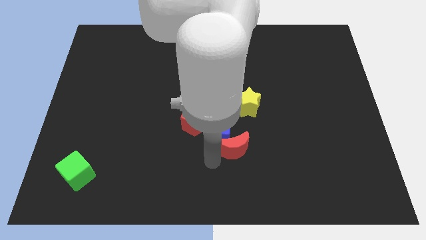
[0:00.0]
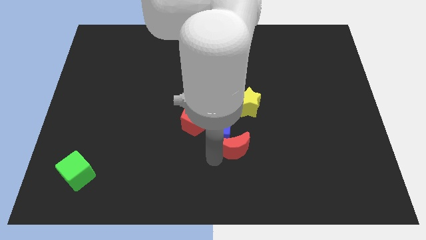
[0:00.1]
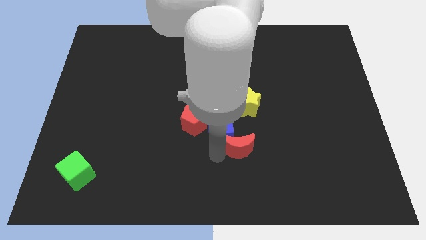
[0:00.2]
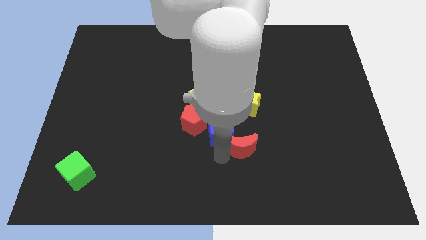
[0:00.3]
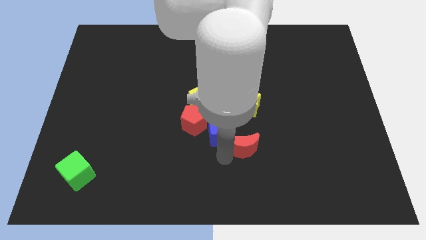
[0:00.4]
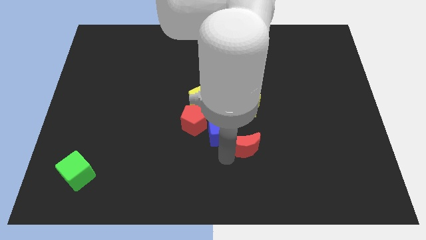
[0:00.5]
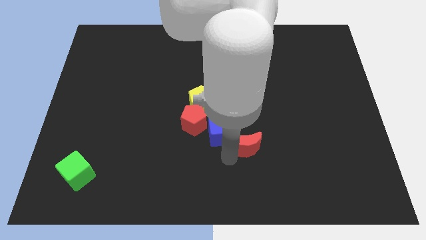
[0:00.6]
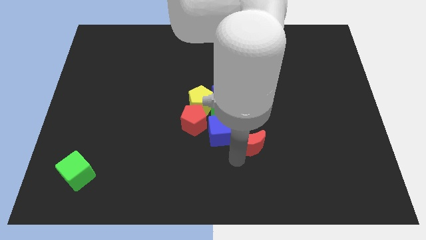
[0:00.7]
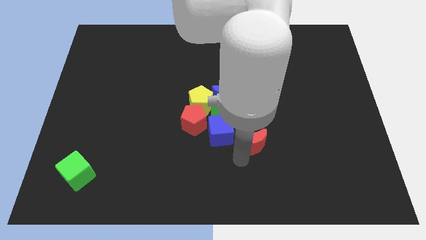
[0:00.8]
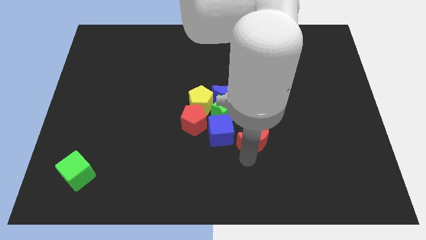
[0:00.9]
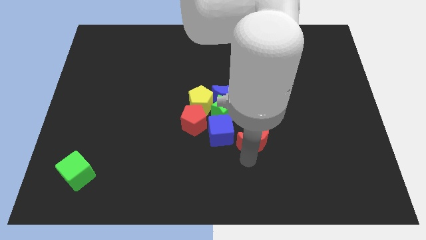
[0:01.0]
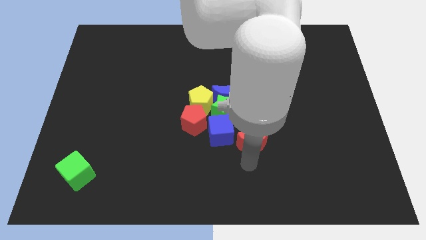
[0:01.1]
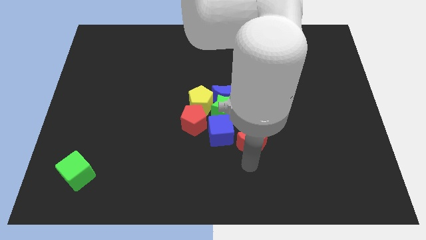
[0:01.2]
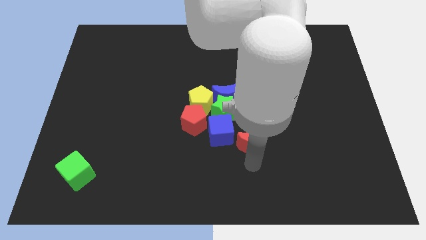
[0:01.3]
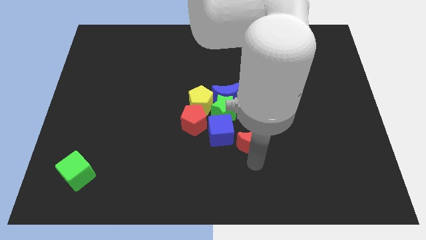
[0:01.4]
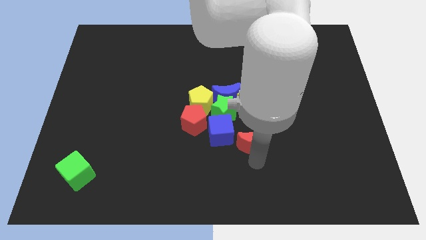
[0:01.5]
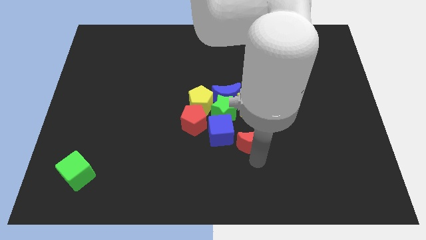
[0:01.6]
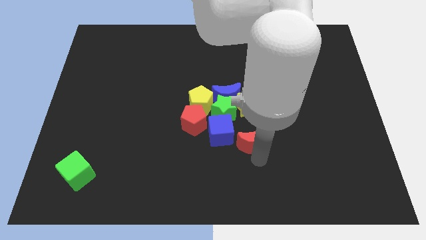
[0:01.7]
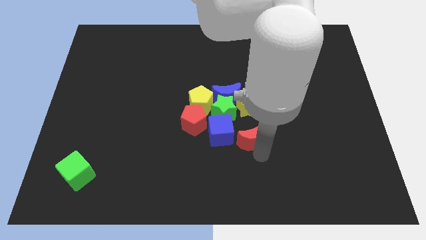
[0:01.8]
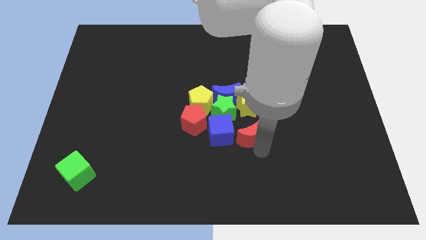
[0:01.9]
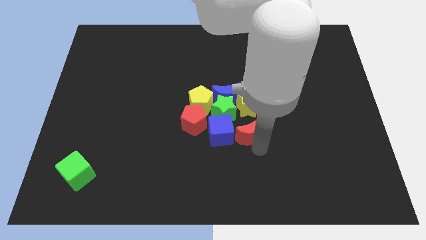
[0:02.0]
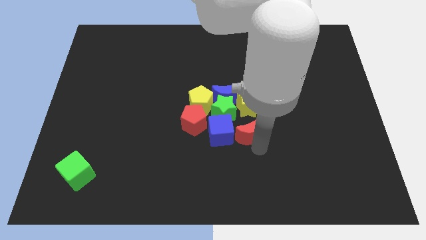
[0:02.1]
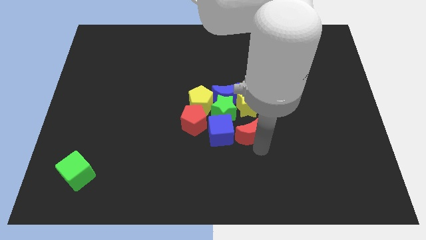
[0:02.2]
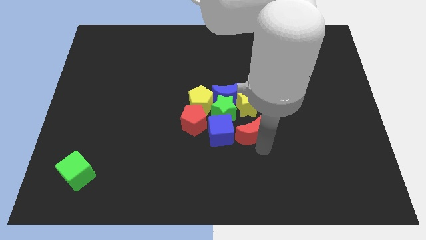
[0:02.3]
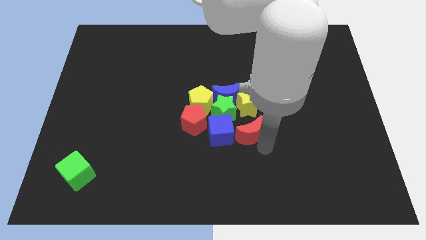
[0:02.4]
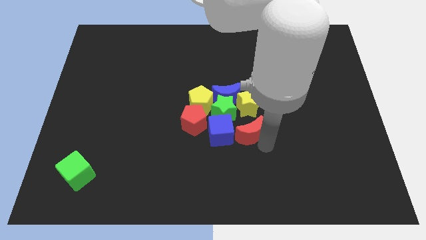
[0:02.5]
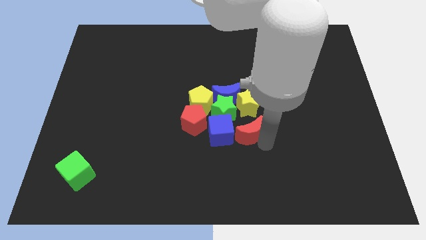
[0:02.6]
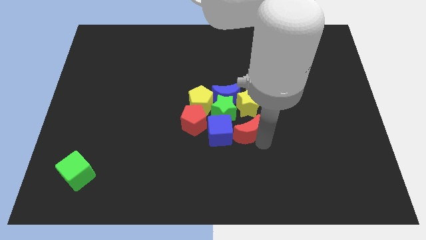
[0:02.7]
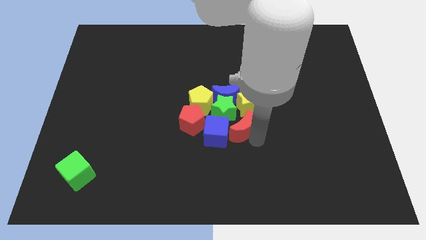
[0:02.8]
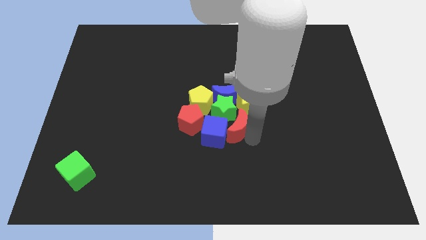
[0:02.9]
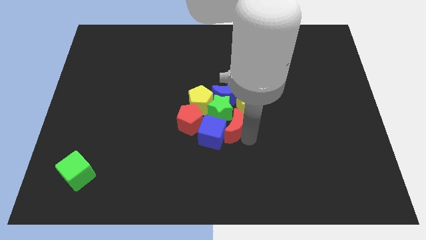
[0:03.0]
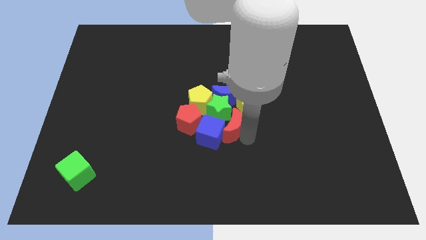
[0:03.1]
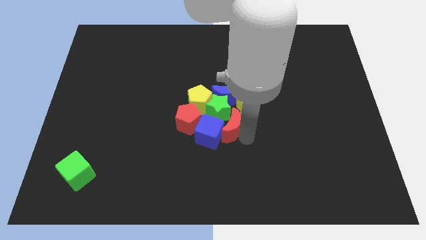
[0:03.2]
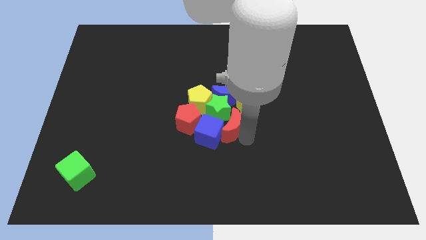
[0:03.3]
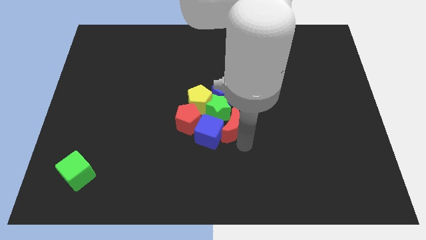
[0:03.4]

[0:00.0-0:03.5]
place the red crescent in between green star and blue cube

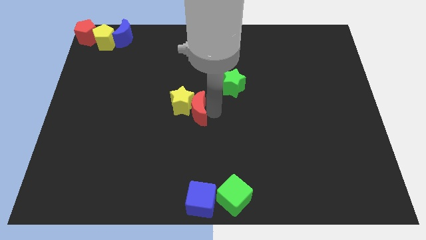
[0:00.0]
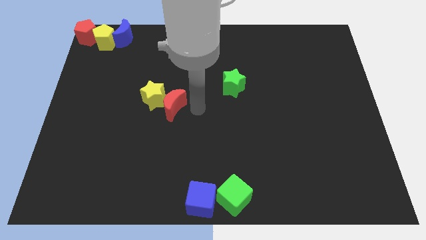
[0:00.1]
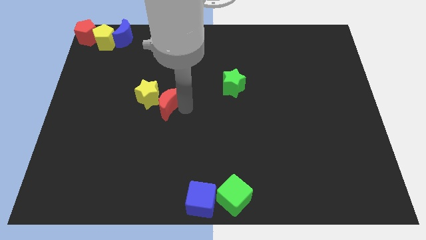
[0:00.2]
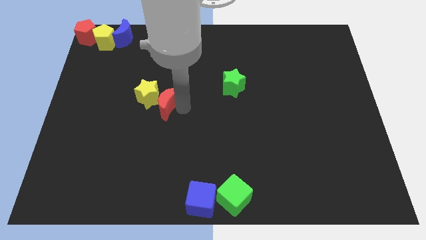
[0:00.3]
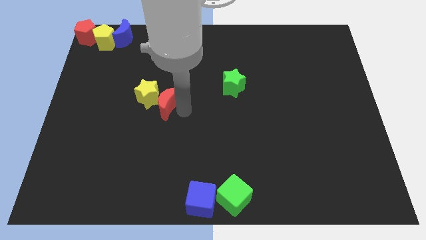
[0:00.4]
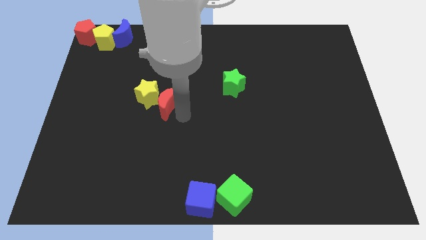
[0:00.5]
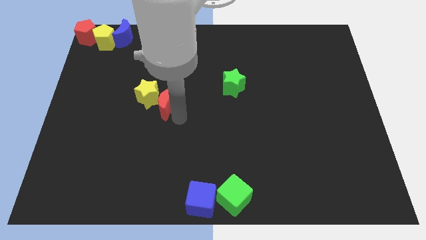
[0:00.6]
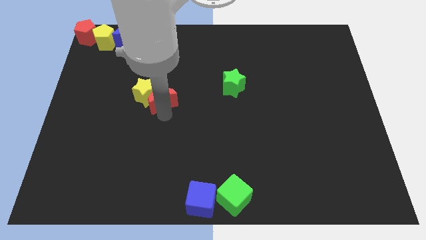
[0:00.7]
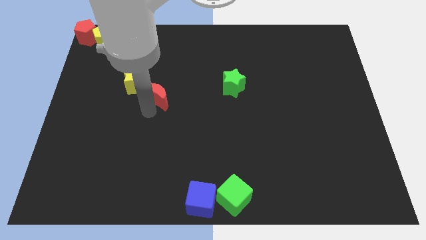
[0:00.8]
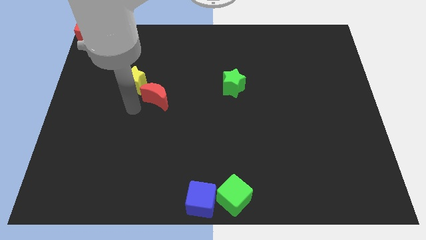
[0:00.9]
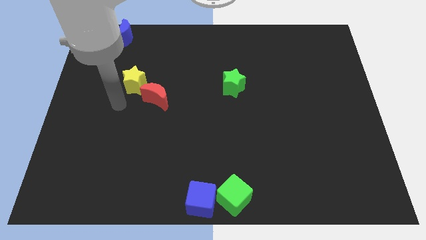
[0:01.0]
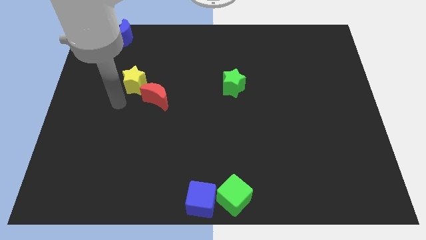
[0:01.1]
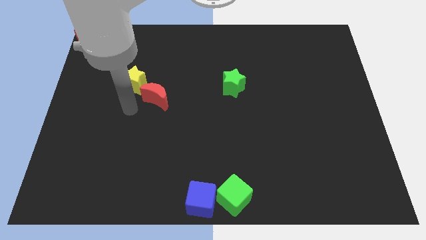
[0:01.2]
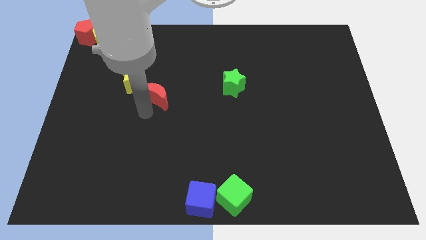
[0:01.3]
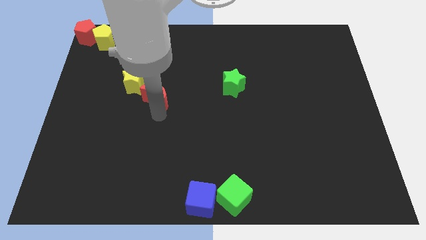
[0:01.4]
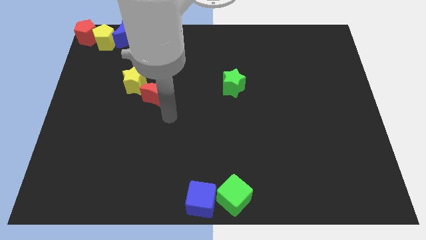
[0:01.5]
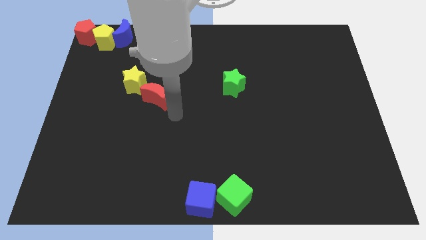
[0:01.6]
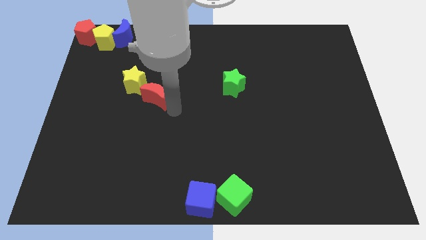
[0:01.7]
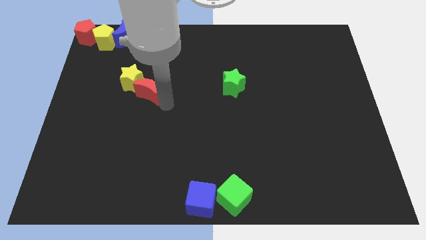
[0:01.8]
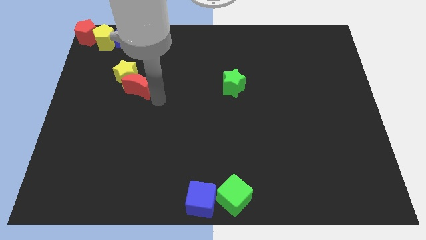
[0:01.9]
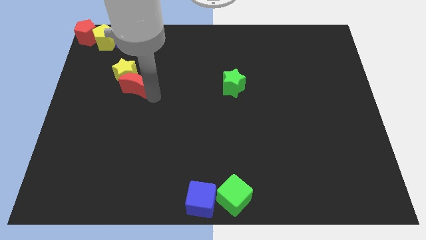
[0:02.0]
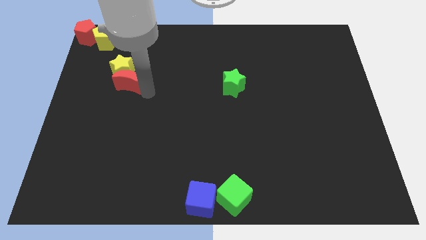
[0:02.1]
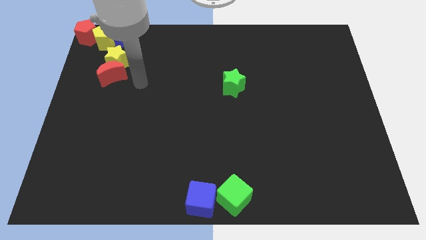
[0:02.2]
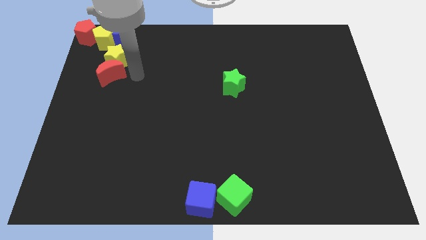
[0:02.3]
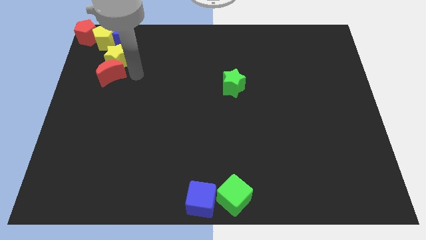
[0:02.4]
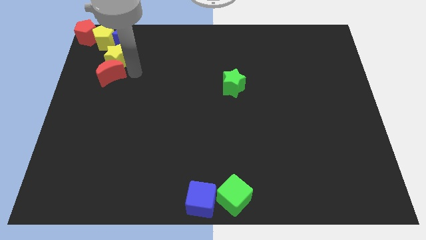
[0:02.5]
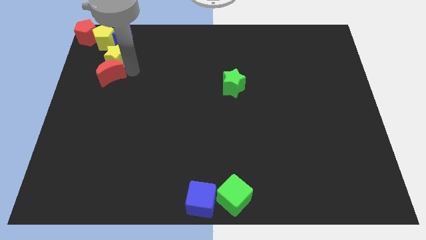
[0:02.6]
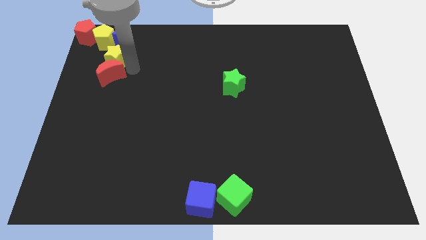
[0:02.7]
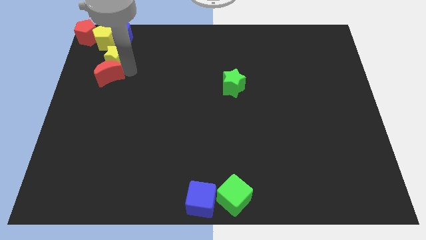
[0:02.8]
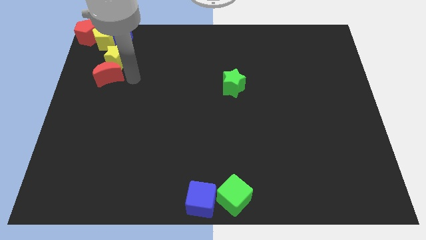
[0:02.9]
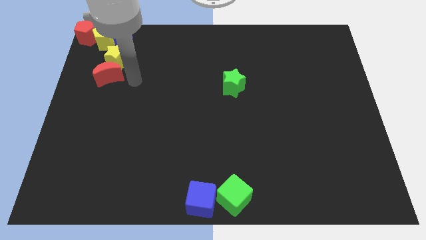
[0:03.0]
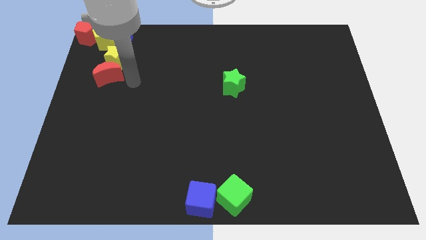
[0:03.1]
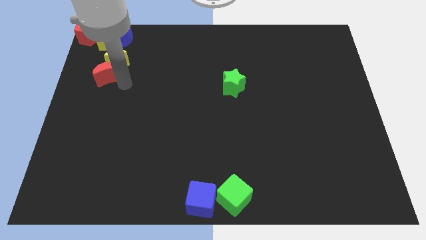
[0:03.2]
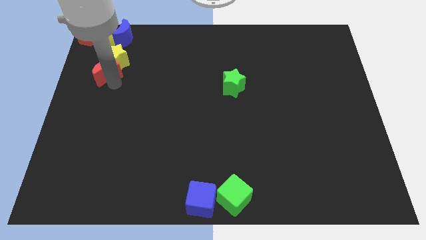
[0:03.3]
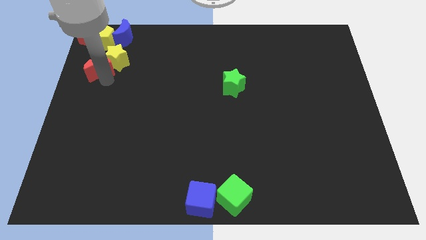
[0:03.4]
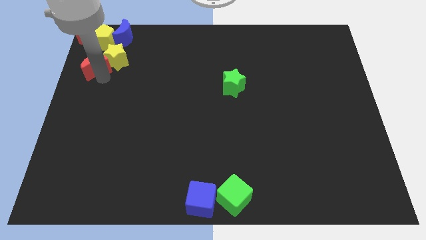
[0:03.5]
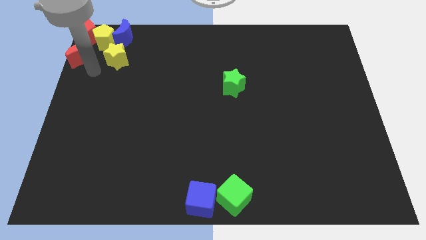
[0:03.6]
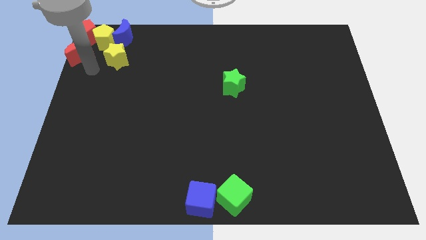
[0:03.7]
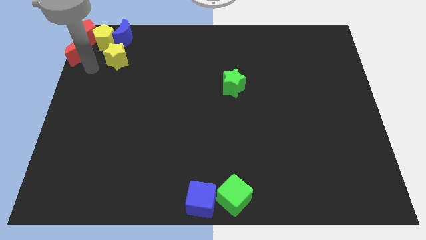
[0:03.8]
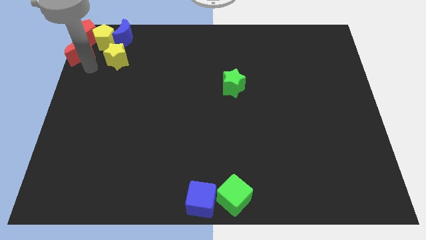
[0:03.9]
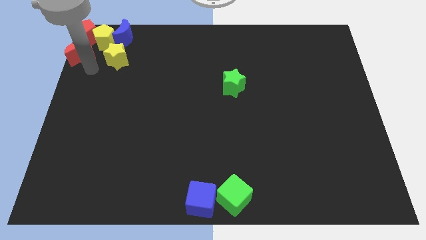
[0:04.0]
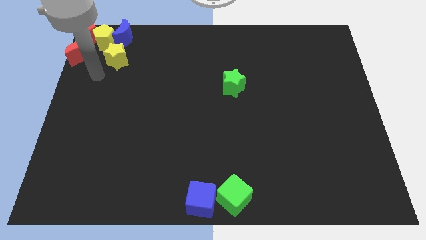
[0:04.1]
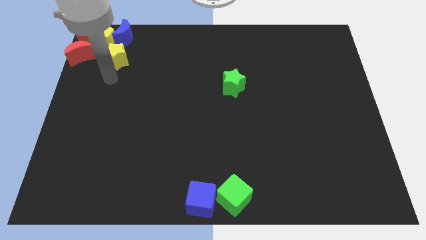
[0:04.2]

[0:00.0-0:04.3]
move the red moon and yellow star to the bottom side of the red pentagon

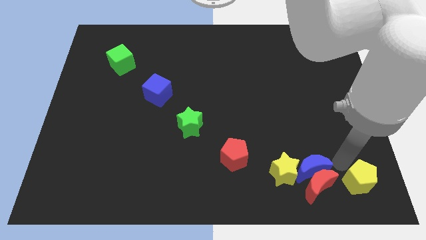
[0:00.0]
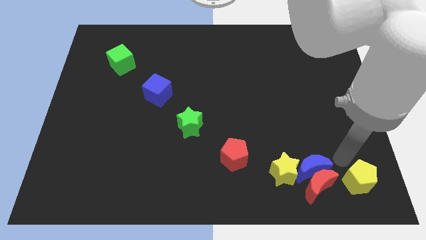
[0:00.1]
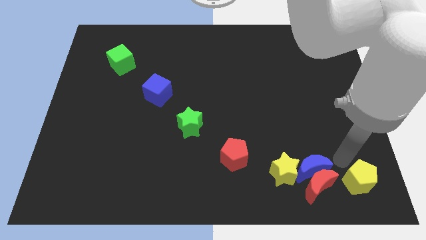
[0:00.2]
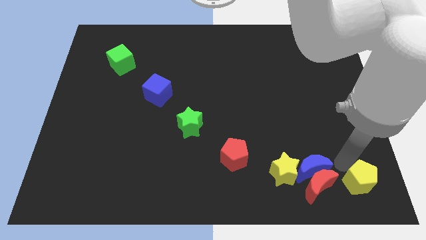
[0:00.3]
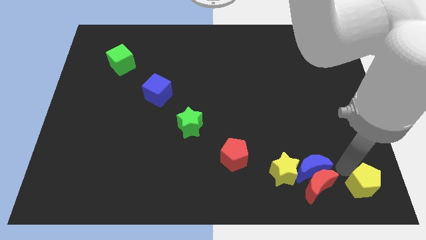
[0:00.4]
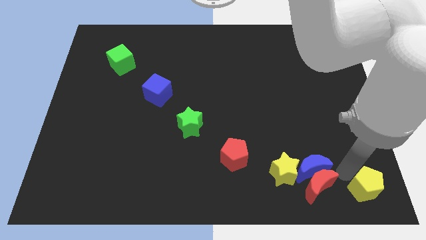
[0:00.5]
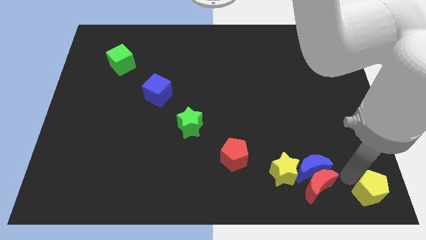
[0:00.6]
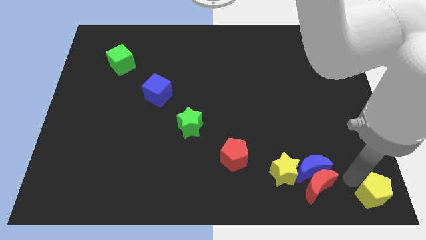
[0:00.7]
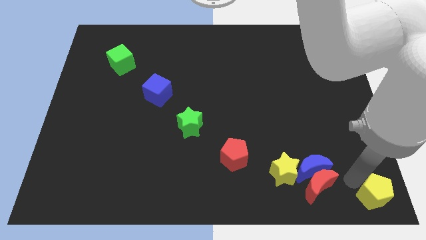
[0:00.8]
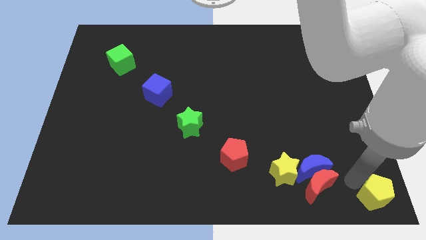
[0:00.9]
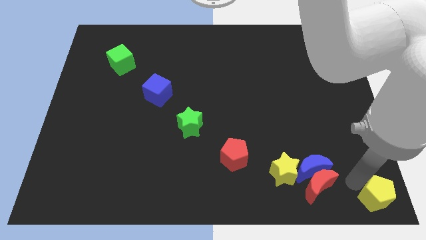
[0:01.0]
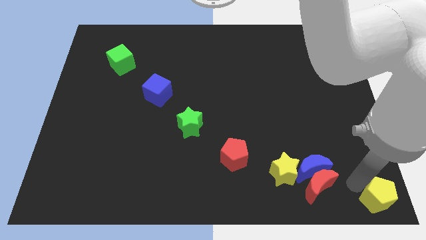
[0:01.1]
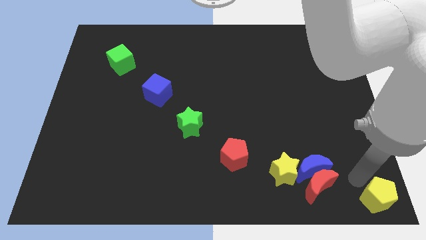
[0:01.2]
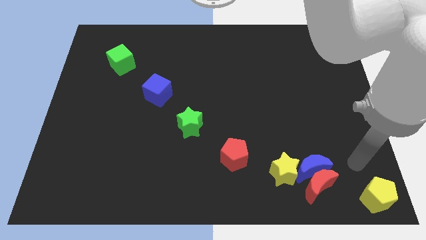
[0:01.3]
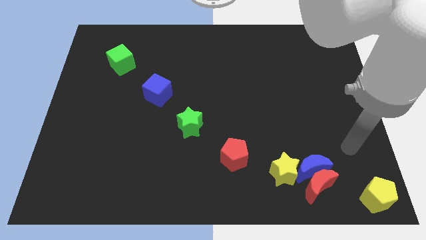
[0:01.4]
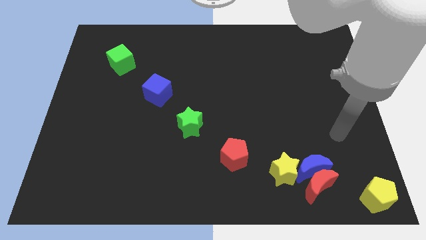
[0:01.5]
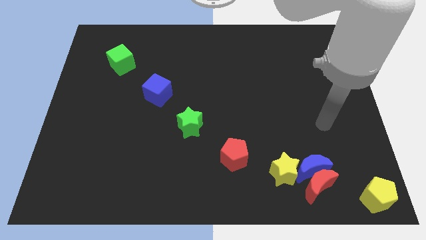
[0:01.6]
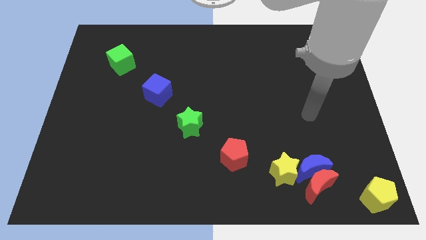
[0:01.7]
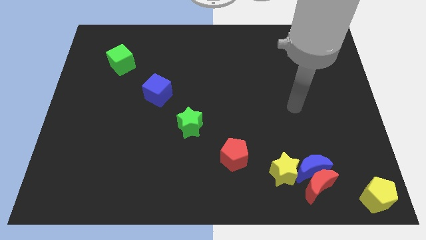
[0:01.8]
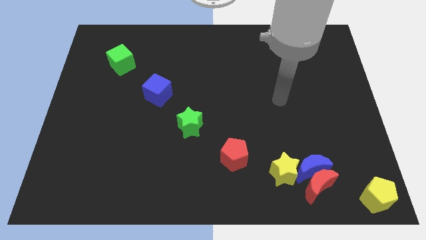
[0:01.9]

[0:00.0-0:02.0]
push the yellow pentagon to the bottom right corner of the board
